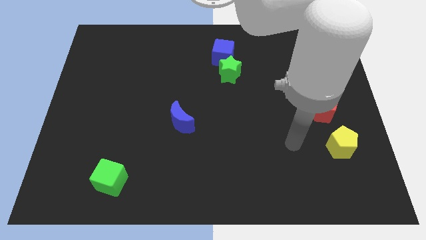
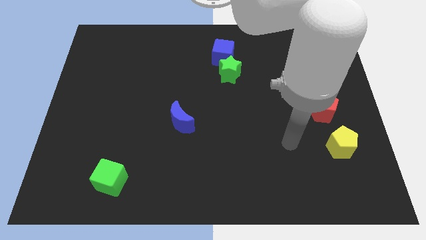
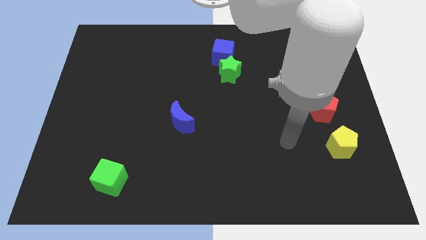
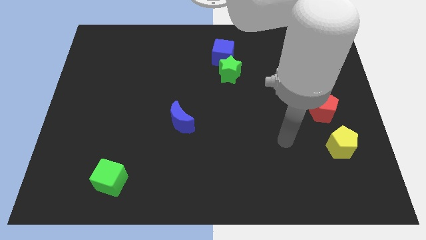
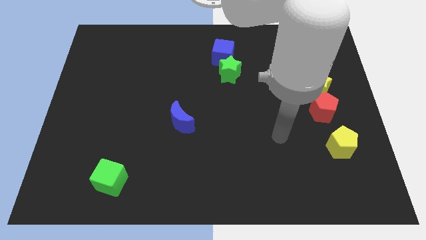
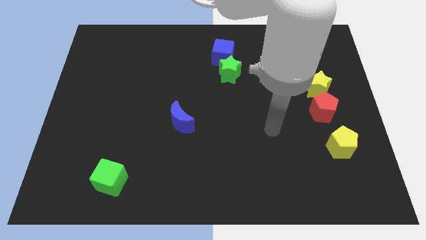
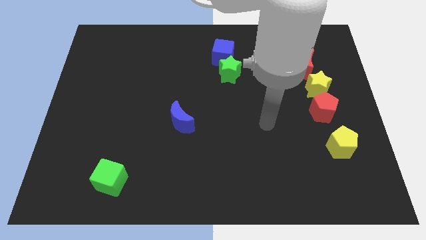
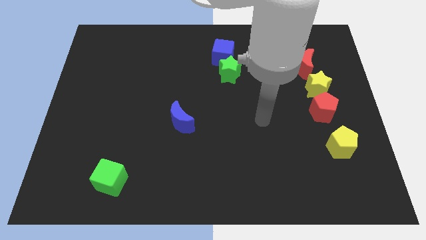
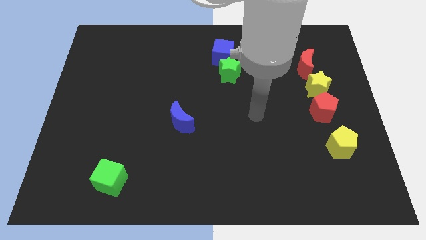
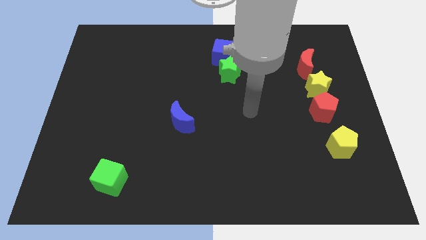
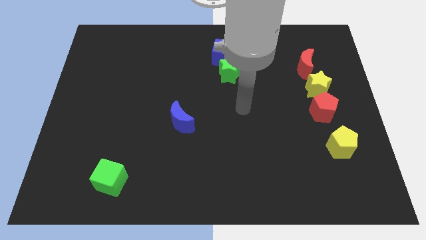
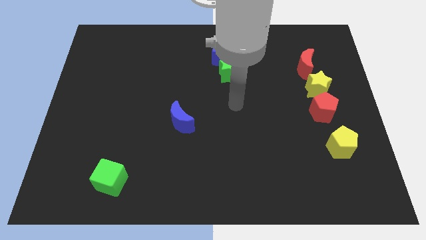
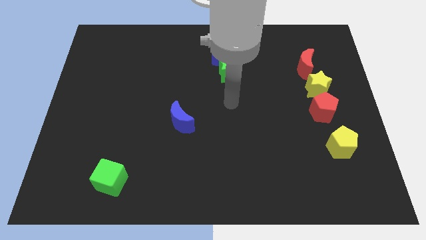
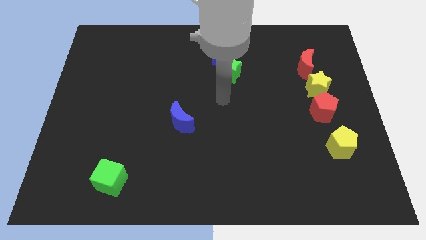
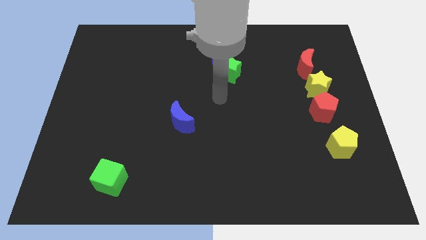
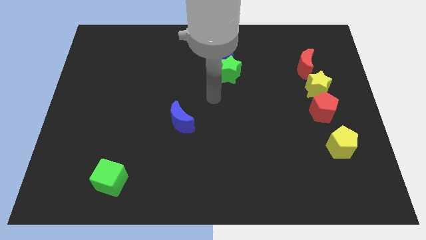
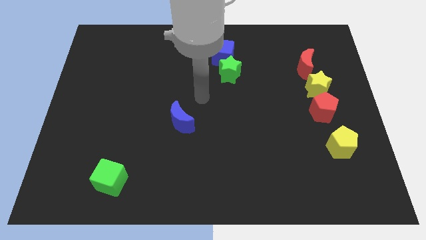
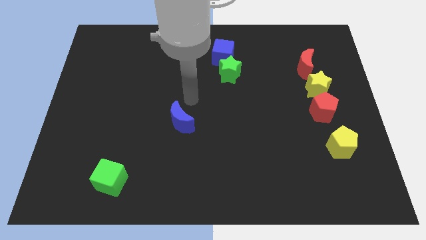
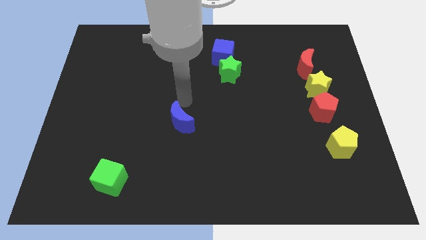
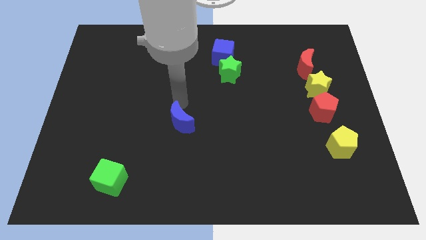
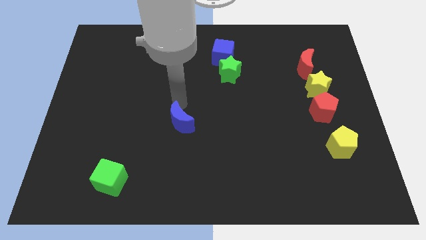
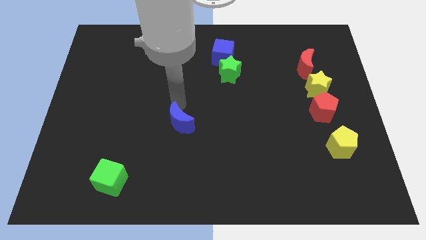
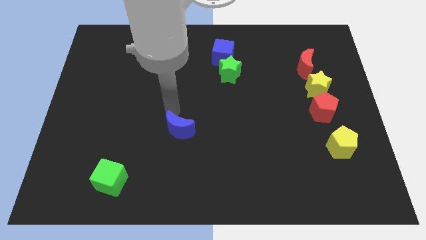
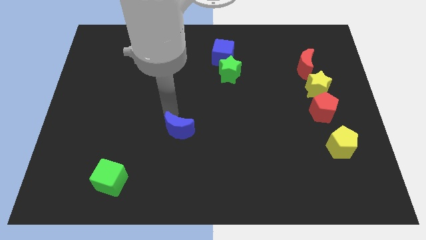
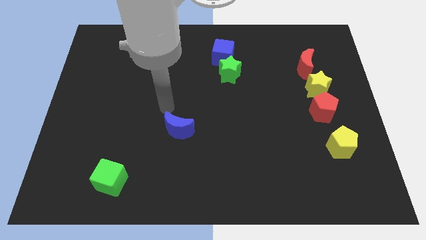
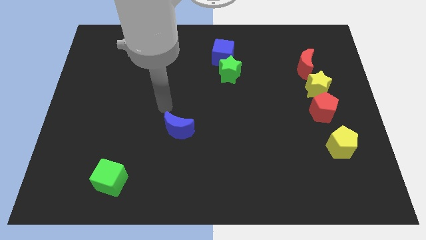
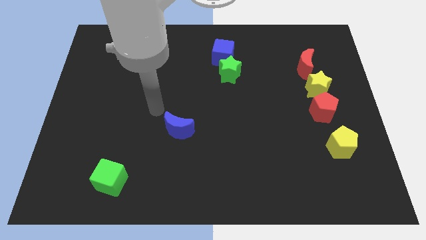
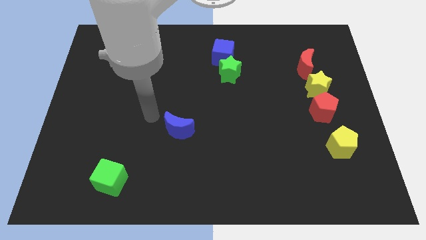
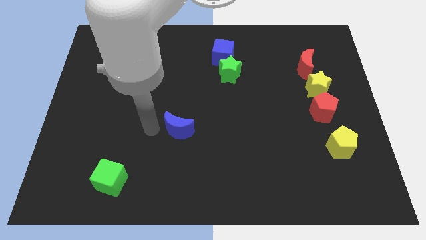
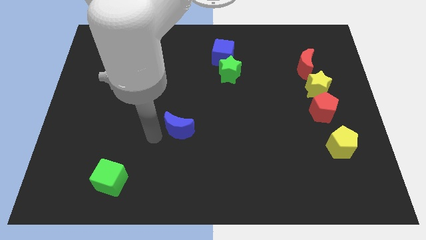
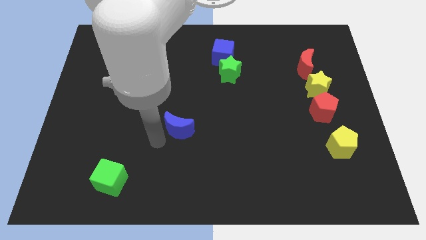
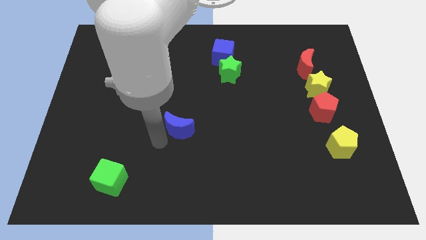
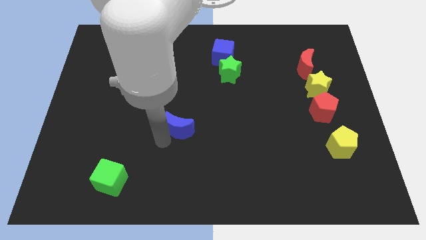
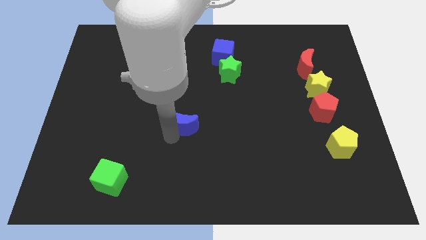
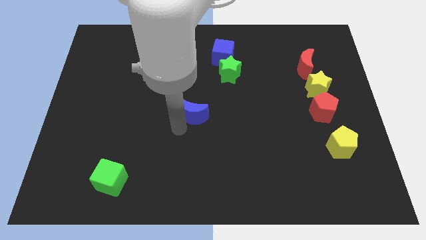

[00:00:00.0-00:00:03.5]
push the blue moon slightly upwards

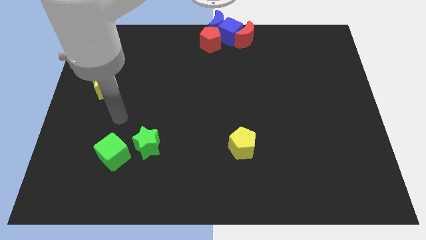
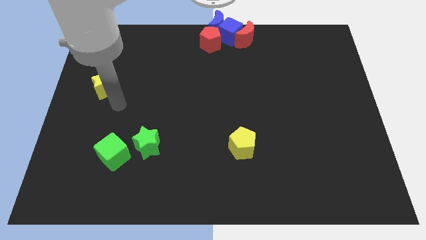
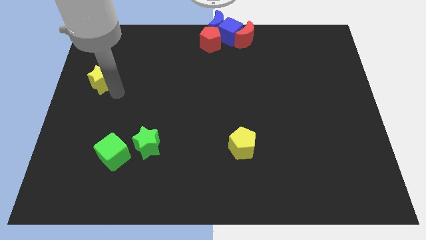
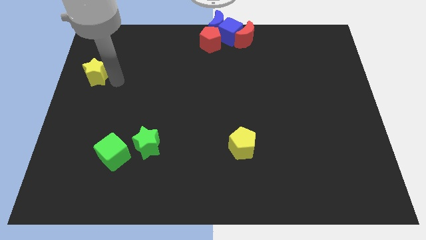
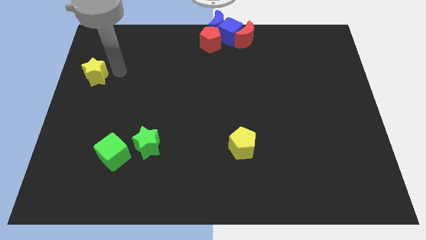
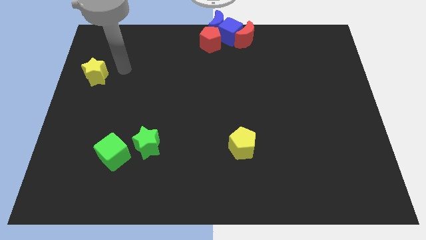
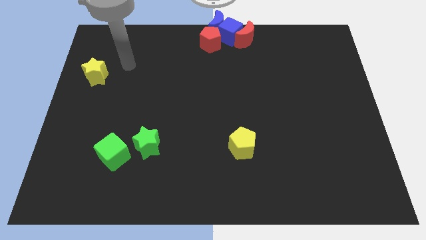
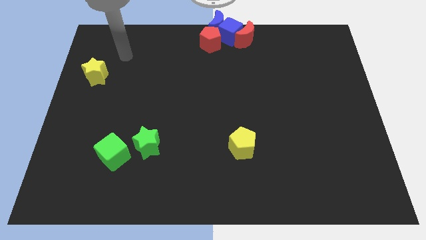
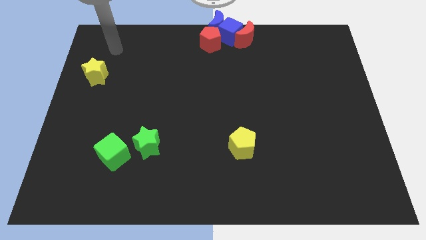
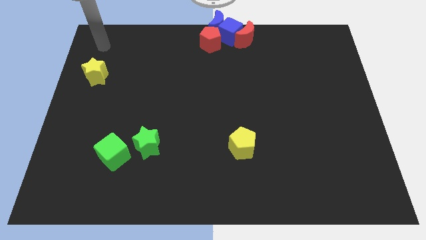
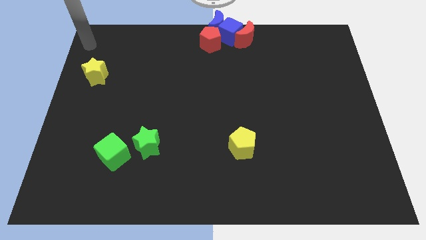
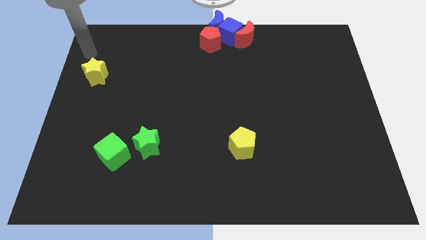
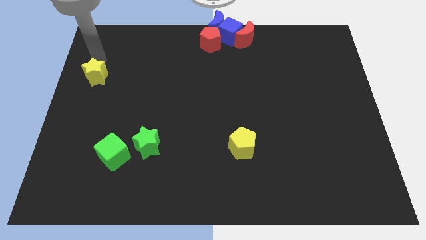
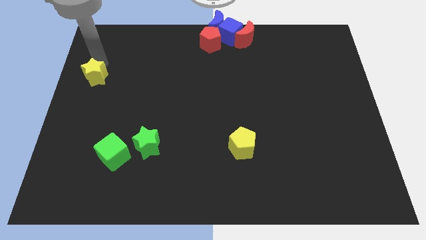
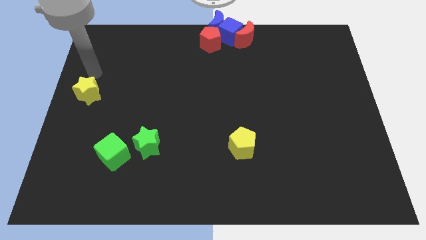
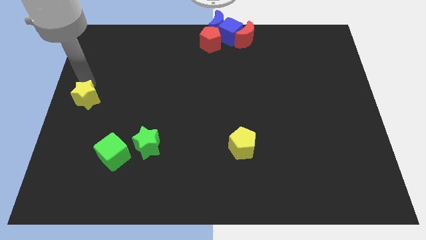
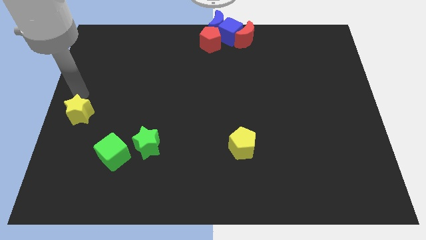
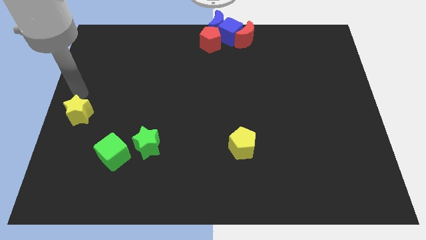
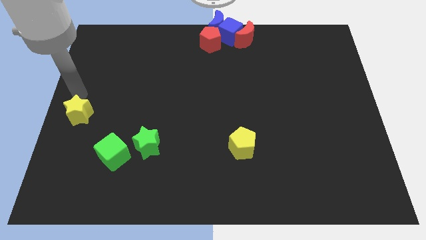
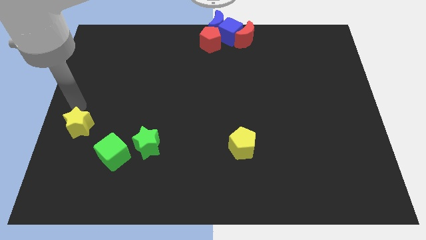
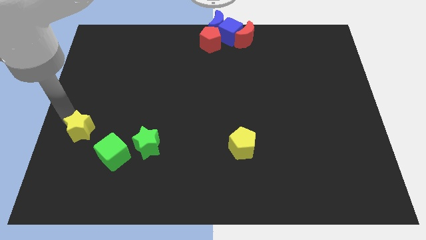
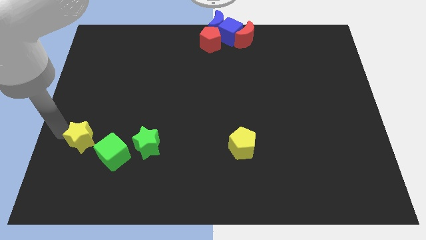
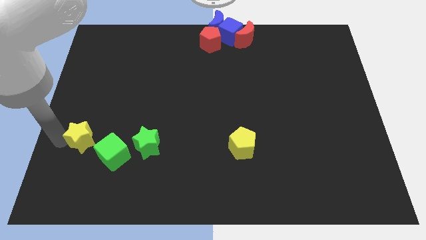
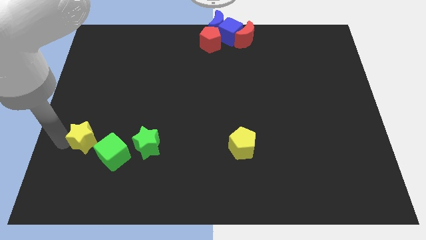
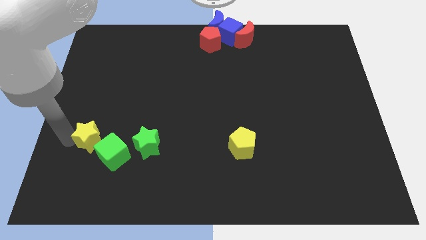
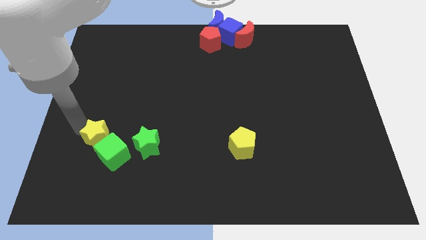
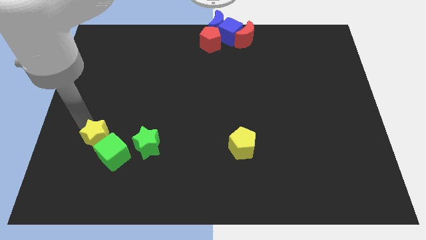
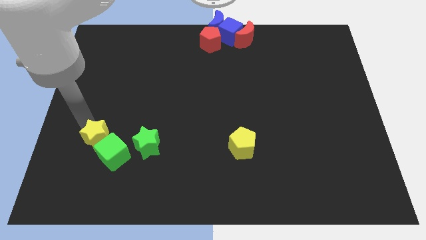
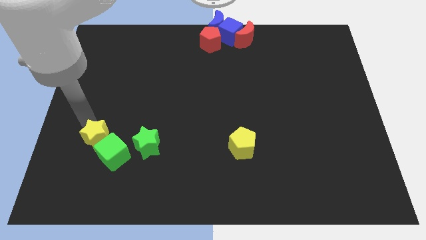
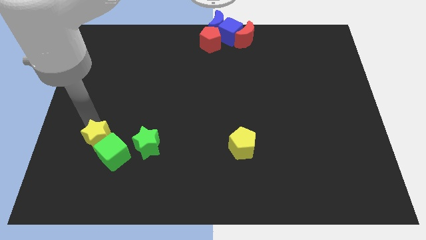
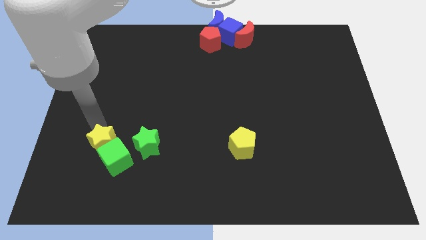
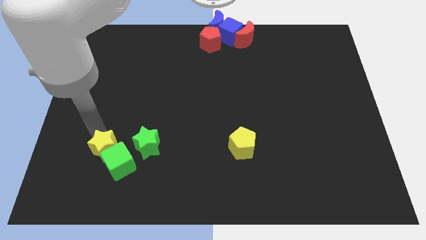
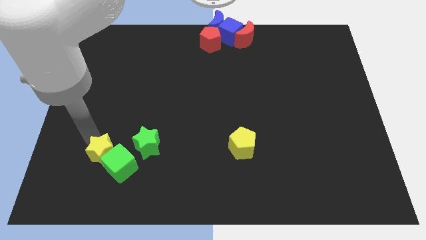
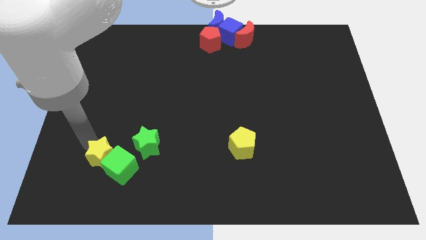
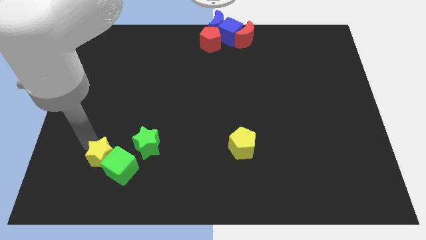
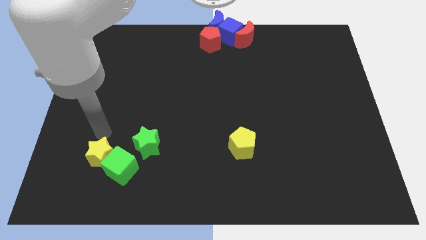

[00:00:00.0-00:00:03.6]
push the yellow star into the green cube

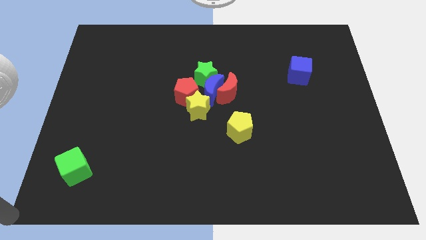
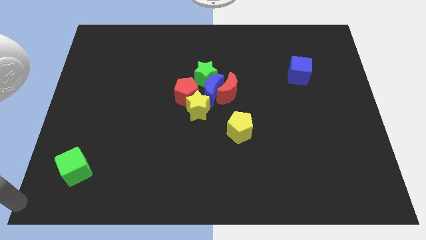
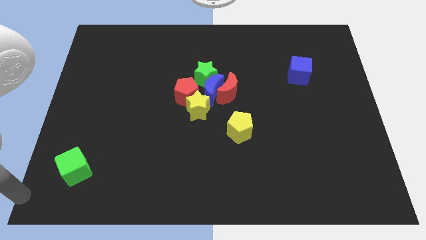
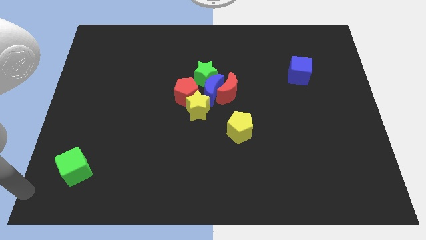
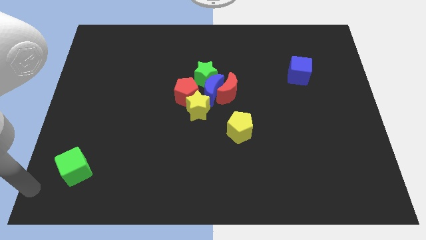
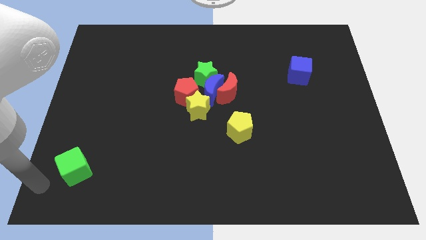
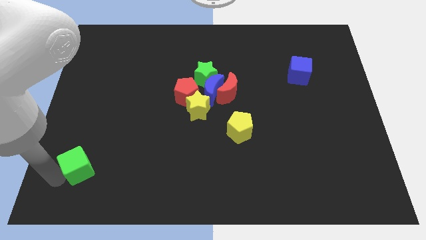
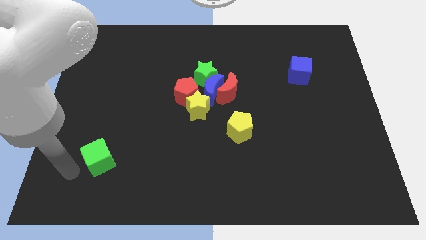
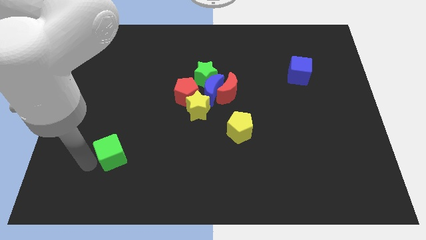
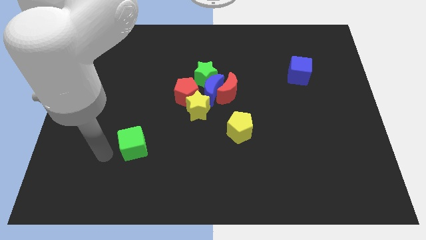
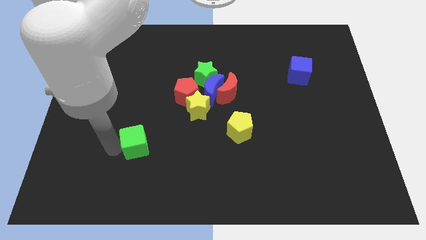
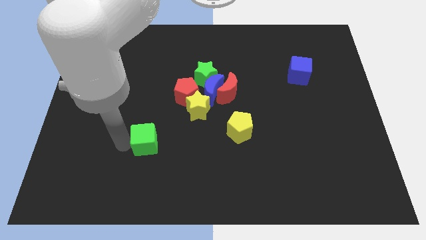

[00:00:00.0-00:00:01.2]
push the green cube towards the group of blocks

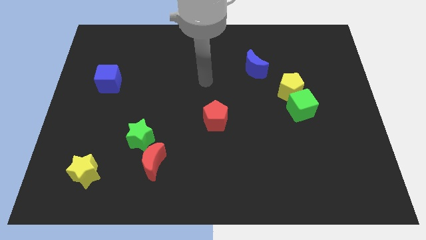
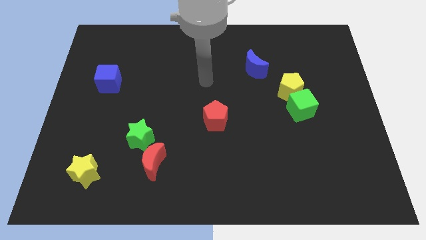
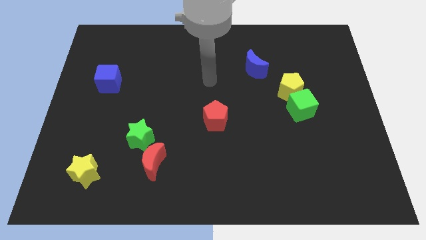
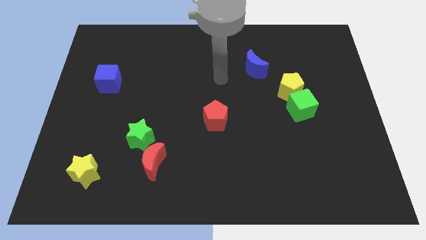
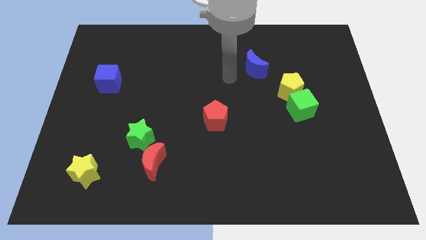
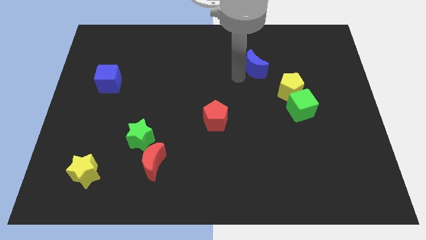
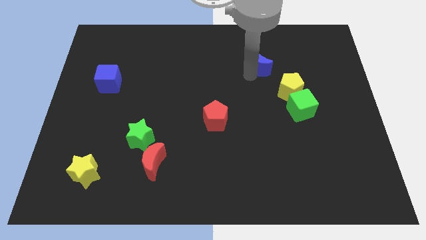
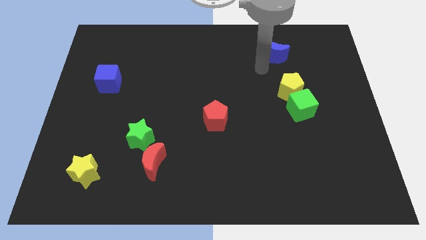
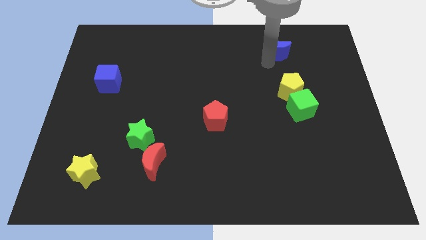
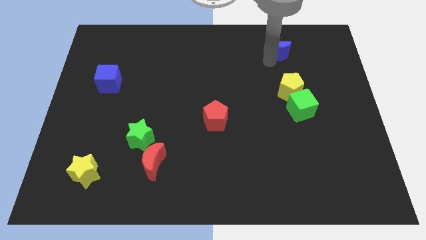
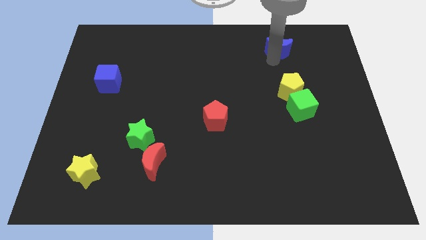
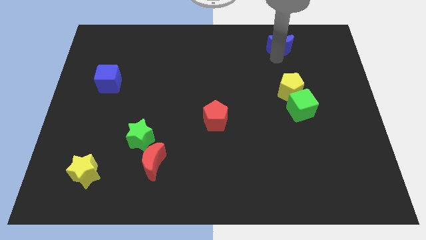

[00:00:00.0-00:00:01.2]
move the blue moon above the yellow pentagon
